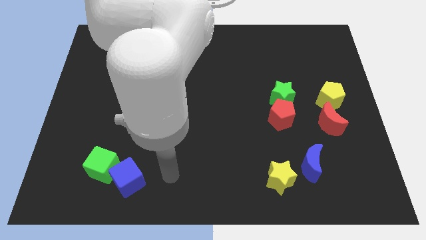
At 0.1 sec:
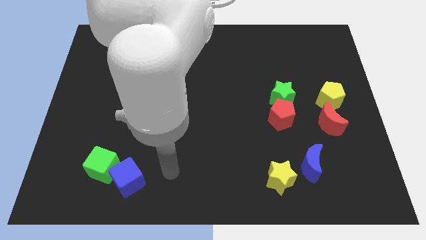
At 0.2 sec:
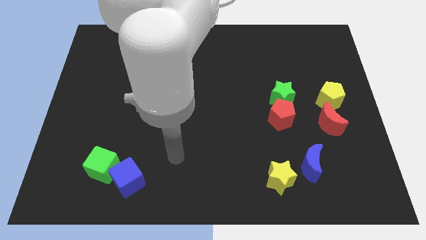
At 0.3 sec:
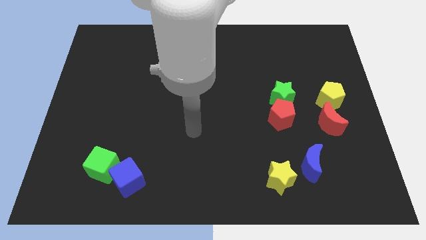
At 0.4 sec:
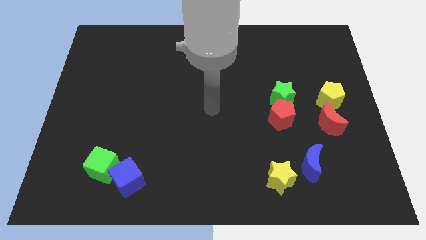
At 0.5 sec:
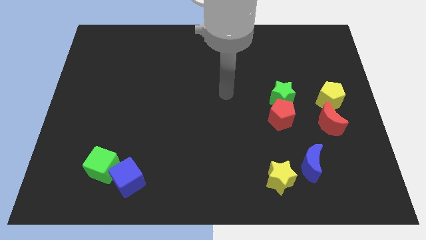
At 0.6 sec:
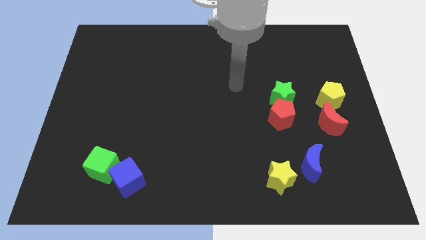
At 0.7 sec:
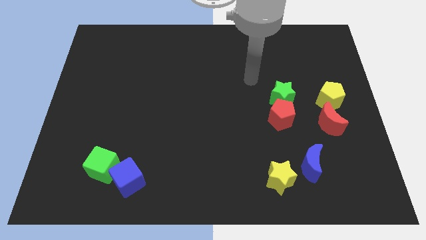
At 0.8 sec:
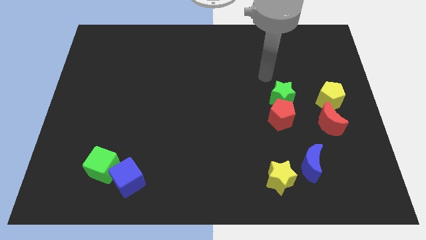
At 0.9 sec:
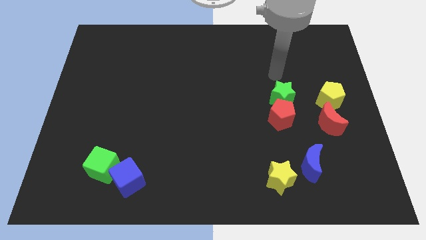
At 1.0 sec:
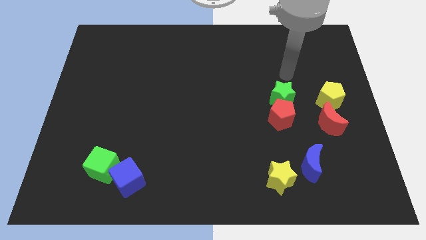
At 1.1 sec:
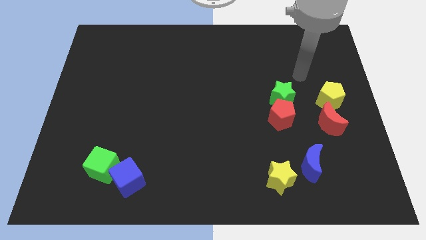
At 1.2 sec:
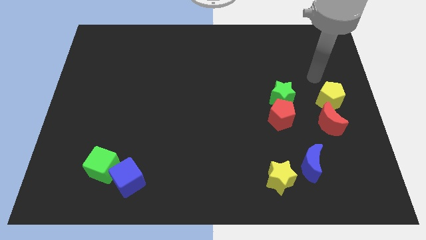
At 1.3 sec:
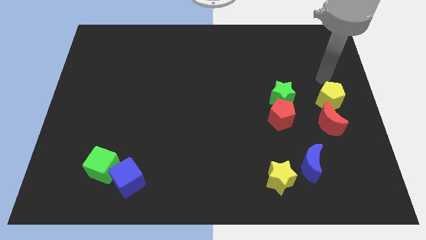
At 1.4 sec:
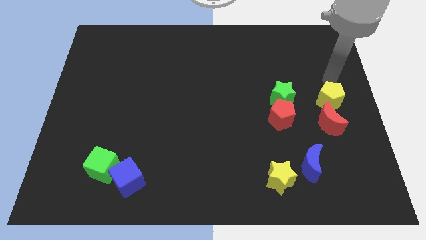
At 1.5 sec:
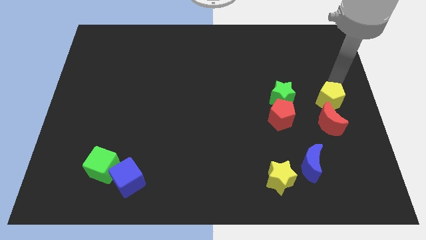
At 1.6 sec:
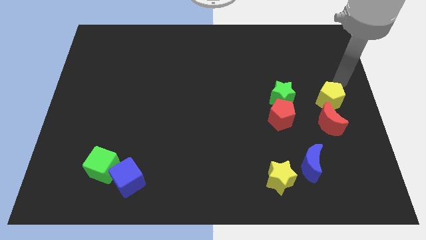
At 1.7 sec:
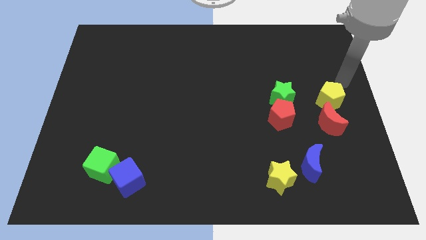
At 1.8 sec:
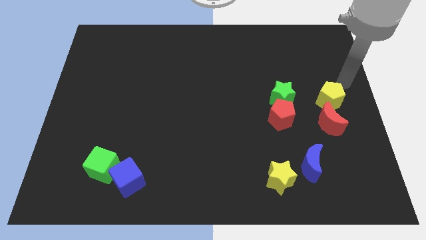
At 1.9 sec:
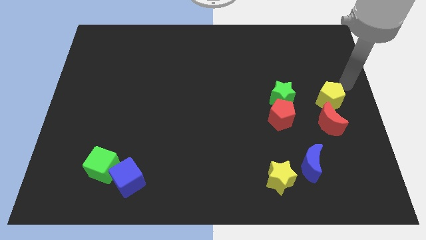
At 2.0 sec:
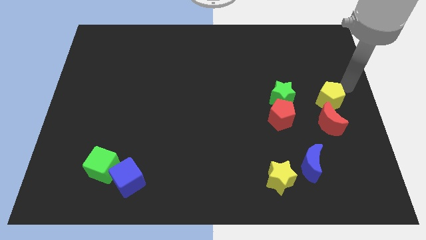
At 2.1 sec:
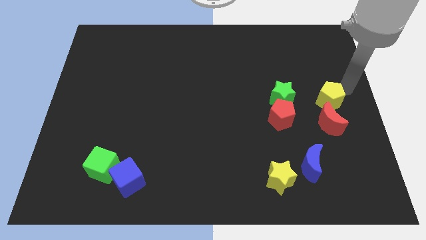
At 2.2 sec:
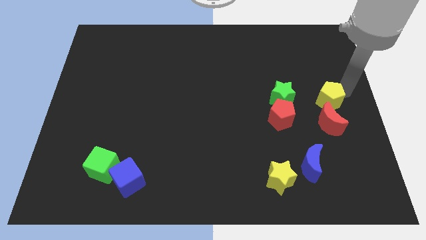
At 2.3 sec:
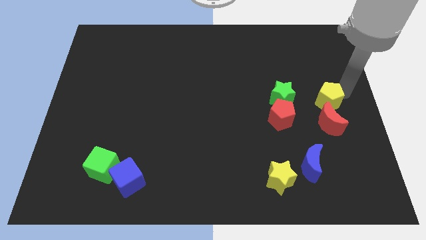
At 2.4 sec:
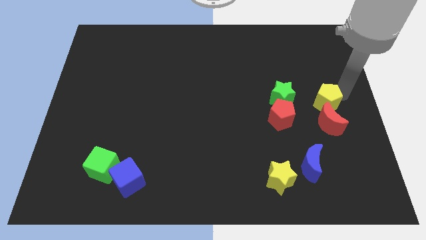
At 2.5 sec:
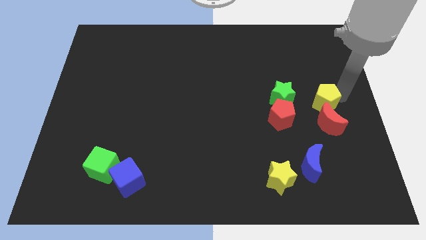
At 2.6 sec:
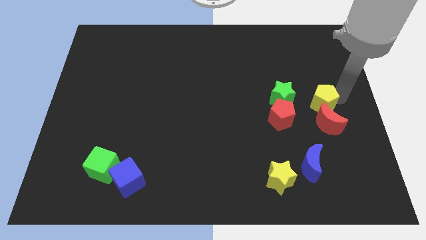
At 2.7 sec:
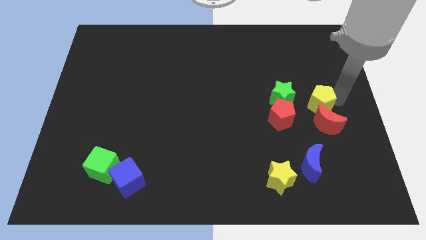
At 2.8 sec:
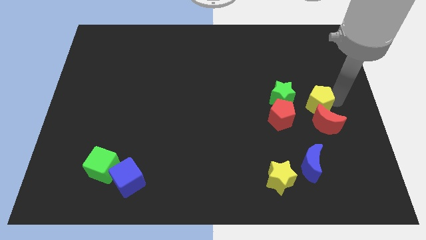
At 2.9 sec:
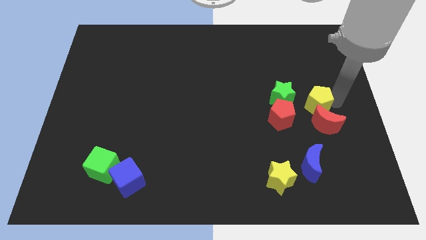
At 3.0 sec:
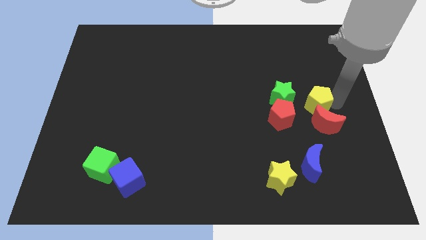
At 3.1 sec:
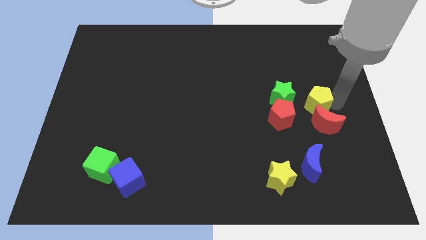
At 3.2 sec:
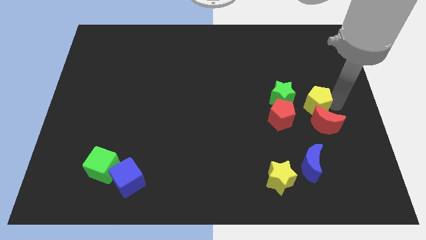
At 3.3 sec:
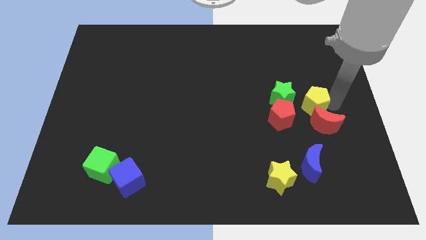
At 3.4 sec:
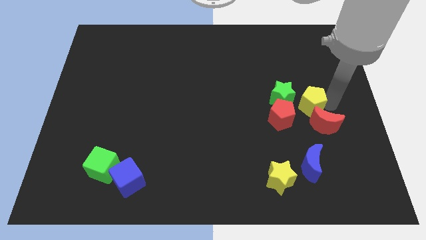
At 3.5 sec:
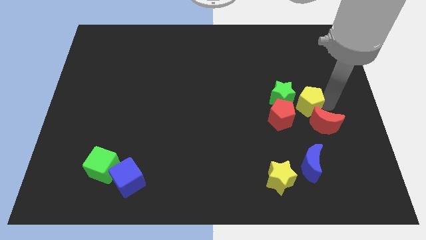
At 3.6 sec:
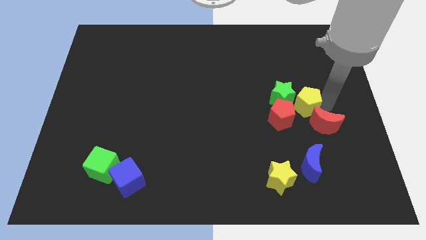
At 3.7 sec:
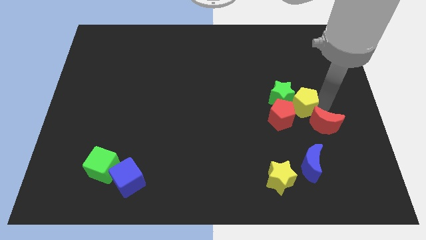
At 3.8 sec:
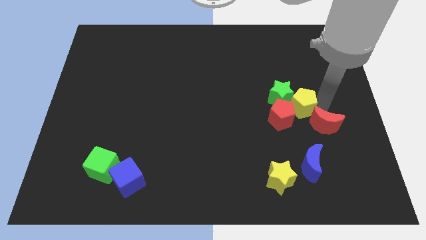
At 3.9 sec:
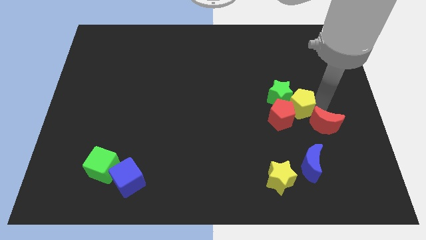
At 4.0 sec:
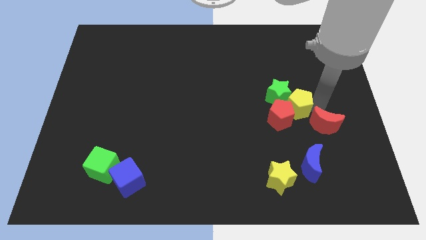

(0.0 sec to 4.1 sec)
move the yellow pentagon close to the red pentagon

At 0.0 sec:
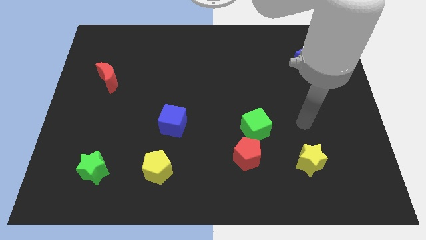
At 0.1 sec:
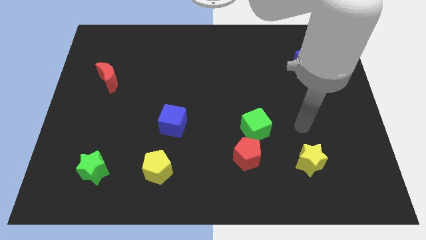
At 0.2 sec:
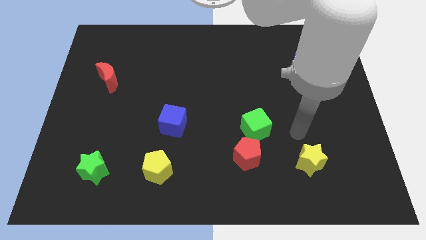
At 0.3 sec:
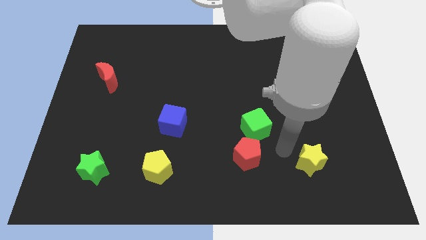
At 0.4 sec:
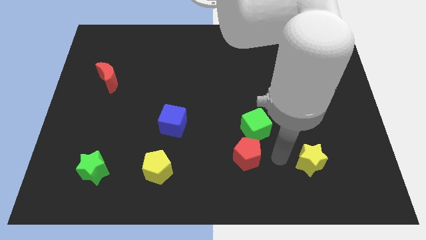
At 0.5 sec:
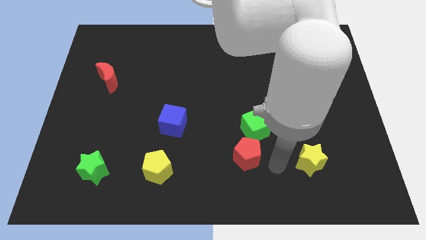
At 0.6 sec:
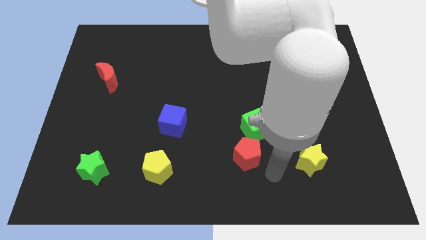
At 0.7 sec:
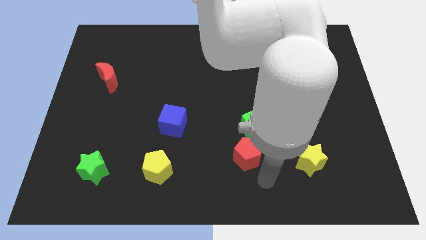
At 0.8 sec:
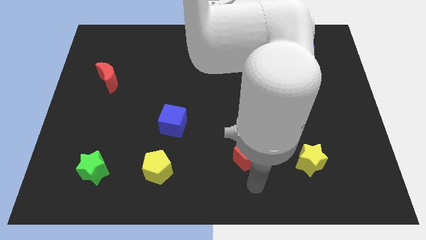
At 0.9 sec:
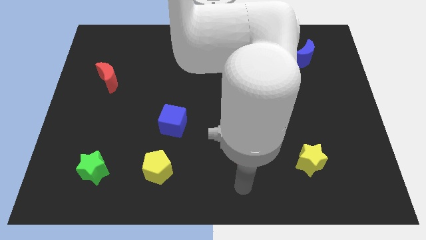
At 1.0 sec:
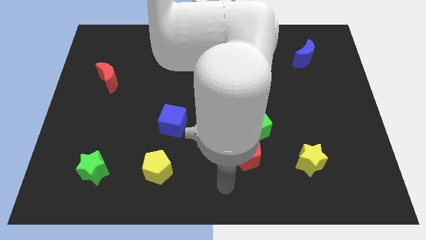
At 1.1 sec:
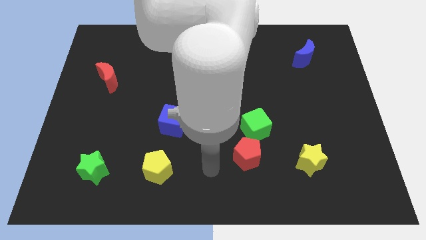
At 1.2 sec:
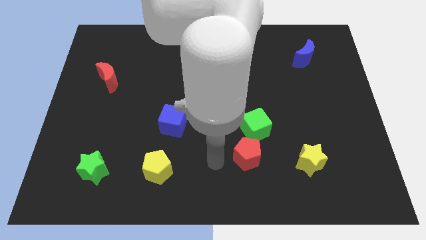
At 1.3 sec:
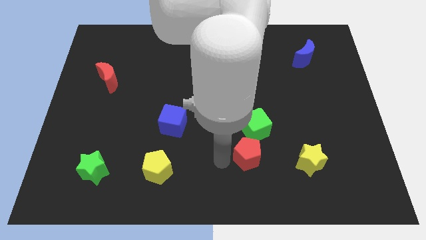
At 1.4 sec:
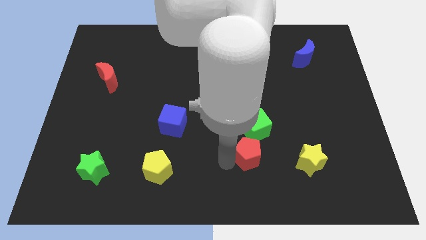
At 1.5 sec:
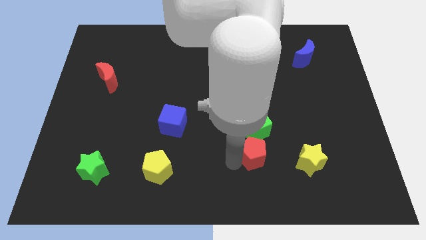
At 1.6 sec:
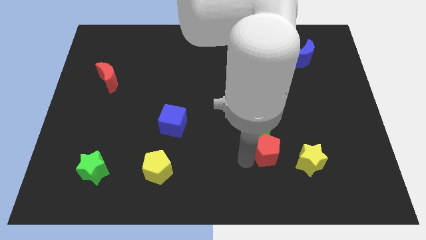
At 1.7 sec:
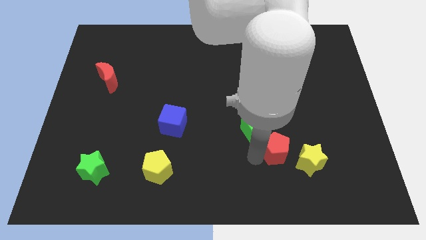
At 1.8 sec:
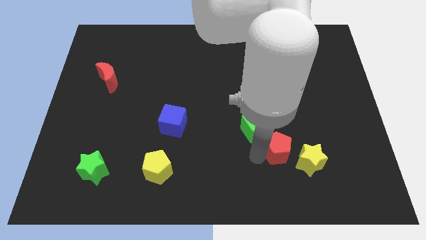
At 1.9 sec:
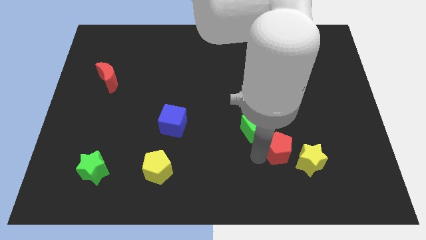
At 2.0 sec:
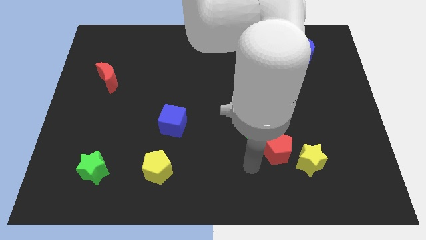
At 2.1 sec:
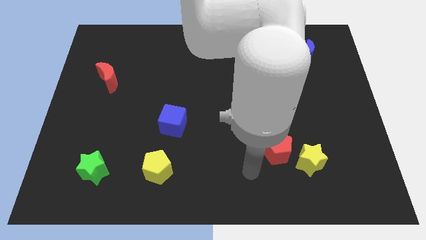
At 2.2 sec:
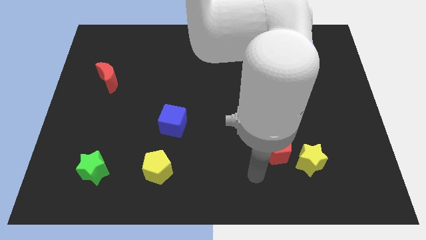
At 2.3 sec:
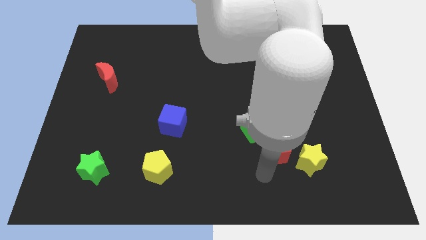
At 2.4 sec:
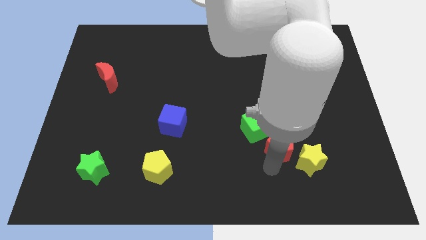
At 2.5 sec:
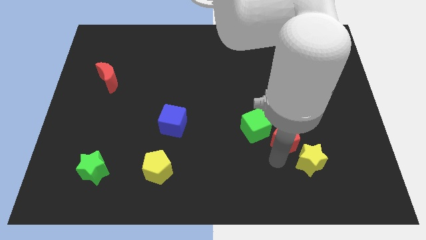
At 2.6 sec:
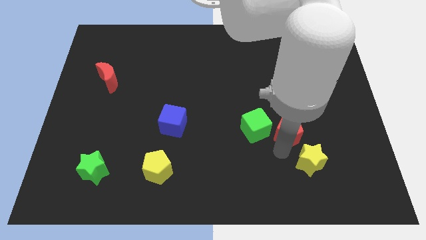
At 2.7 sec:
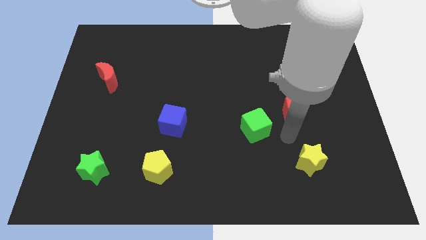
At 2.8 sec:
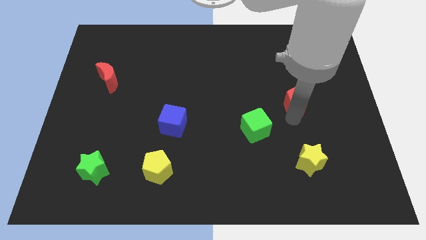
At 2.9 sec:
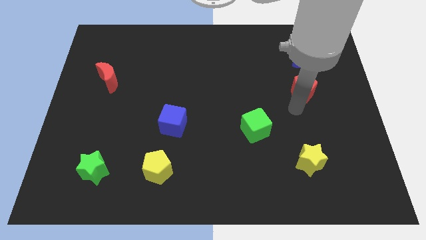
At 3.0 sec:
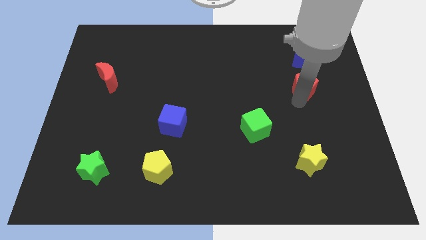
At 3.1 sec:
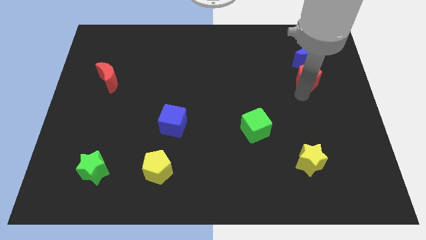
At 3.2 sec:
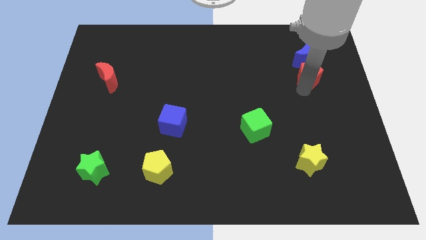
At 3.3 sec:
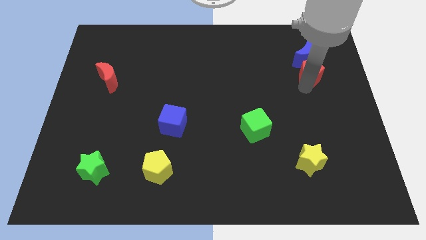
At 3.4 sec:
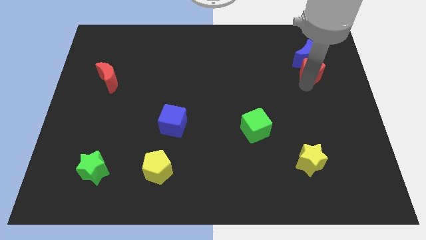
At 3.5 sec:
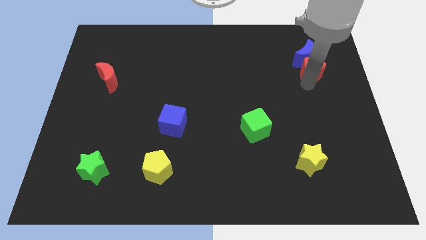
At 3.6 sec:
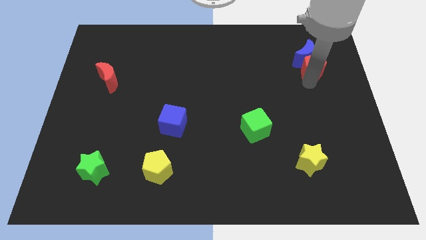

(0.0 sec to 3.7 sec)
push the red pentagon next to the blue moon

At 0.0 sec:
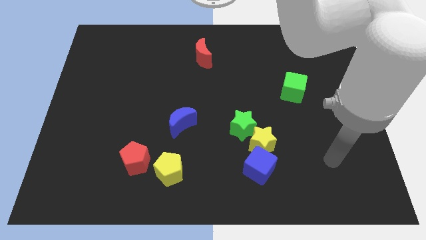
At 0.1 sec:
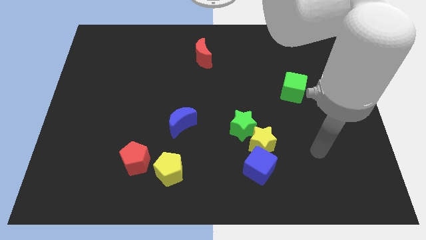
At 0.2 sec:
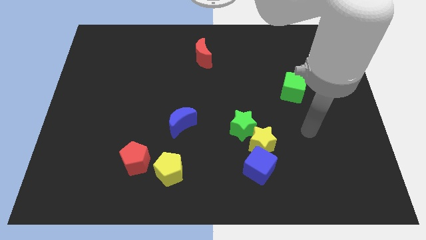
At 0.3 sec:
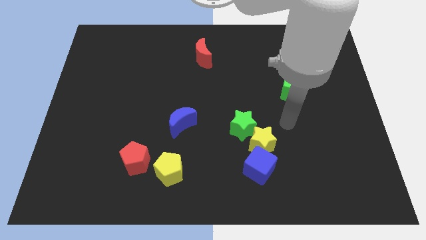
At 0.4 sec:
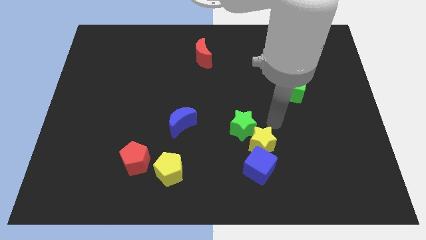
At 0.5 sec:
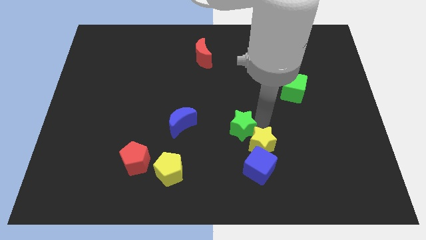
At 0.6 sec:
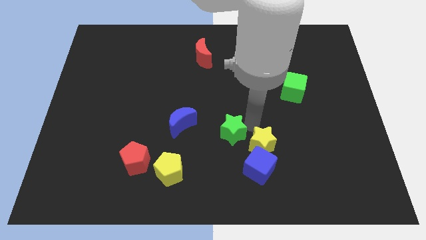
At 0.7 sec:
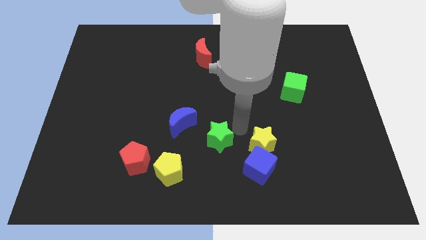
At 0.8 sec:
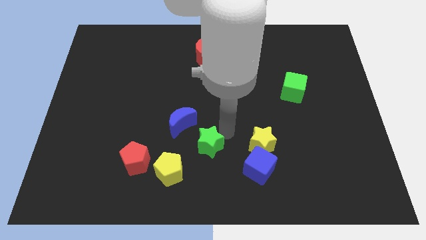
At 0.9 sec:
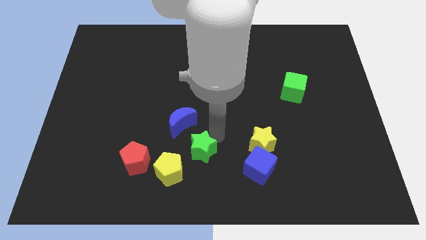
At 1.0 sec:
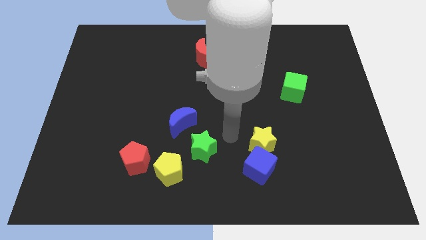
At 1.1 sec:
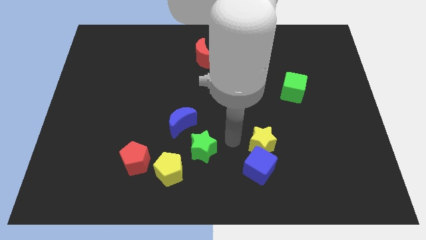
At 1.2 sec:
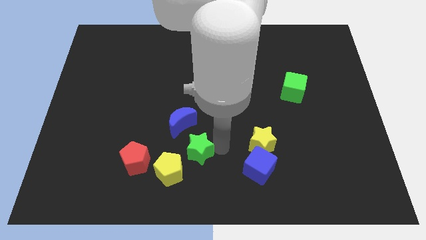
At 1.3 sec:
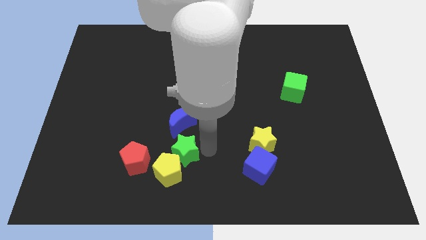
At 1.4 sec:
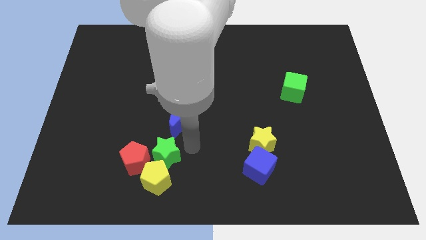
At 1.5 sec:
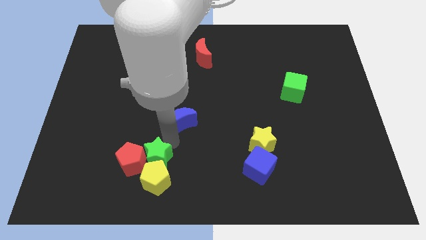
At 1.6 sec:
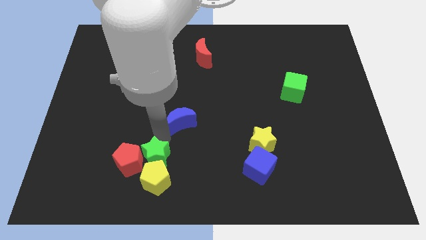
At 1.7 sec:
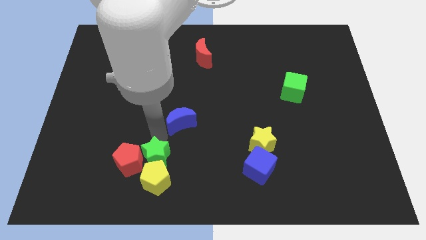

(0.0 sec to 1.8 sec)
push the green star next to the red pentagon
